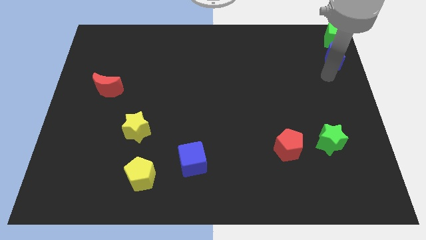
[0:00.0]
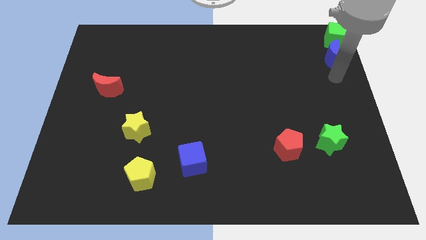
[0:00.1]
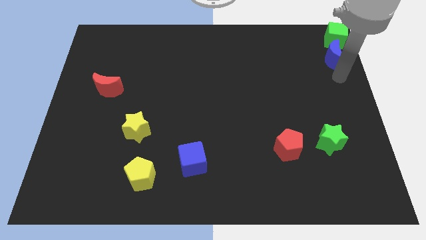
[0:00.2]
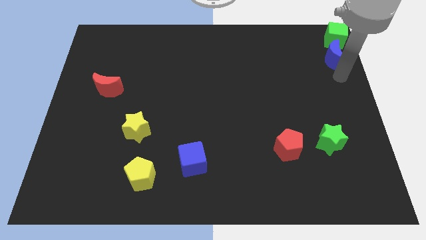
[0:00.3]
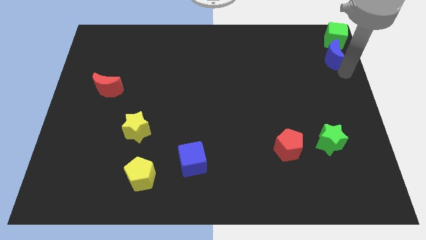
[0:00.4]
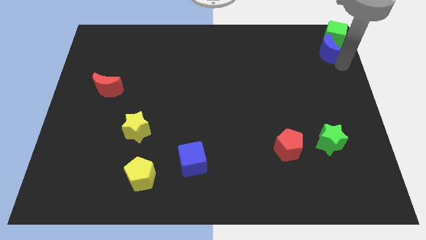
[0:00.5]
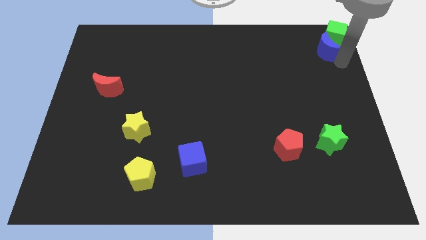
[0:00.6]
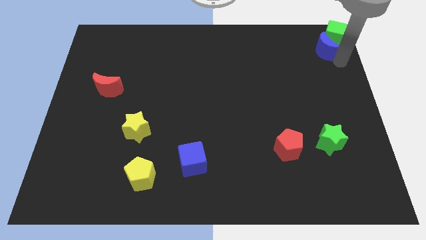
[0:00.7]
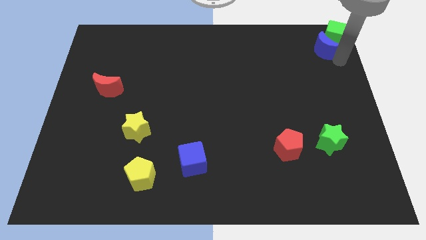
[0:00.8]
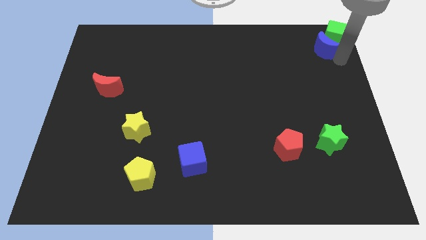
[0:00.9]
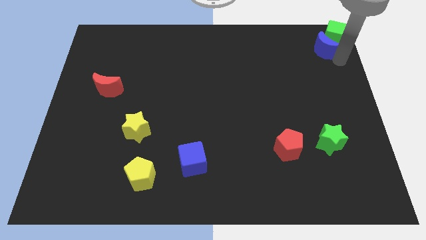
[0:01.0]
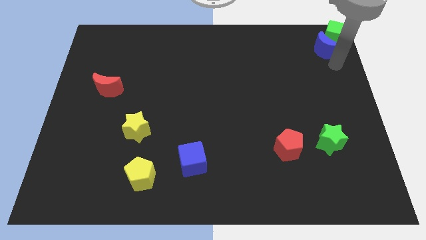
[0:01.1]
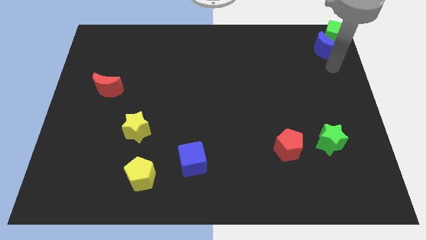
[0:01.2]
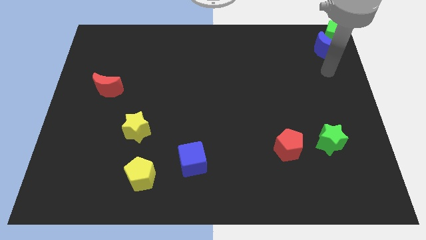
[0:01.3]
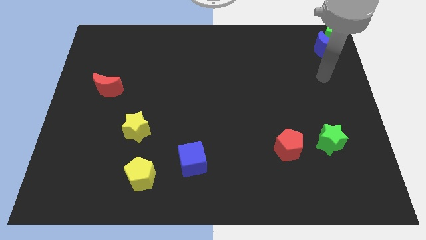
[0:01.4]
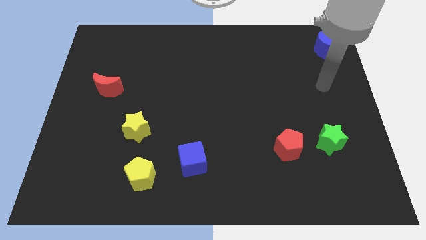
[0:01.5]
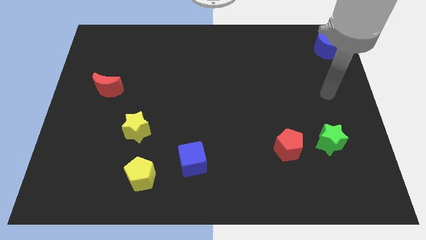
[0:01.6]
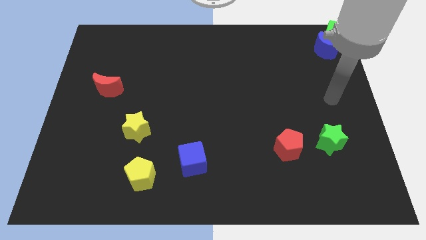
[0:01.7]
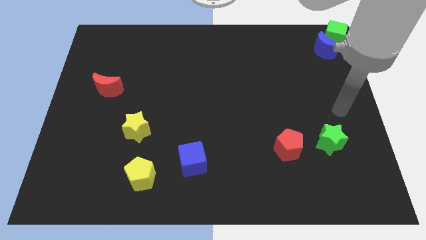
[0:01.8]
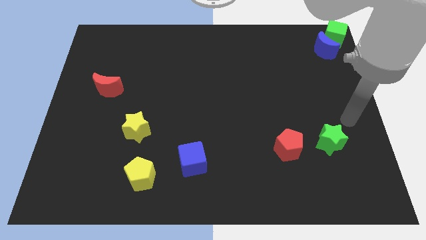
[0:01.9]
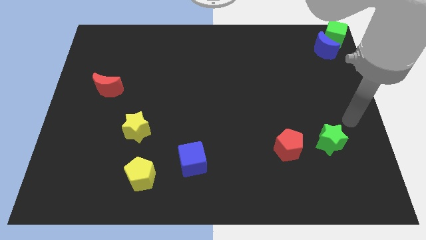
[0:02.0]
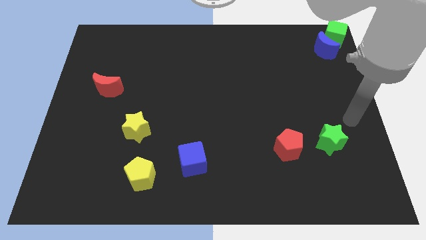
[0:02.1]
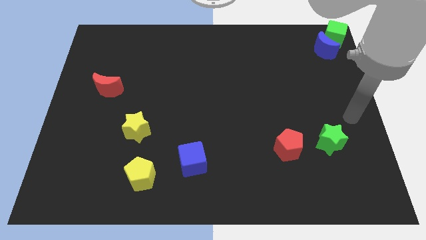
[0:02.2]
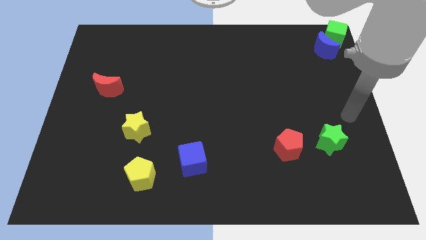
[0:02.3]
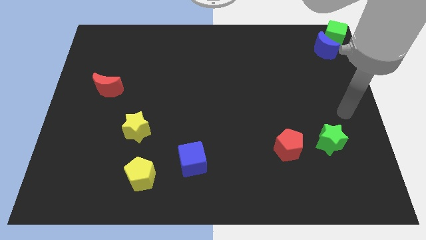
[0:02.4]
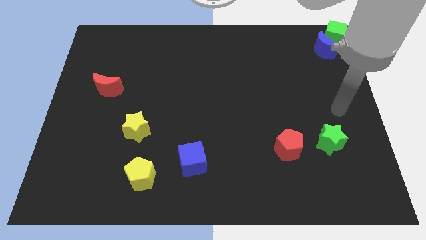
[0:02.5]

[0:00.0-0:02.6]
put the blue crescent into the green cube at the top right

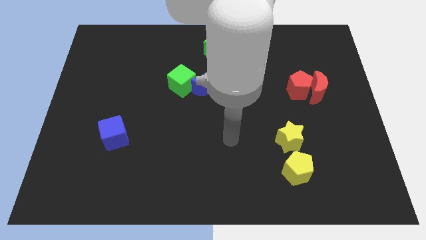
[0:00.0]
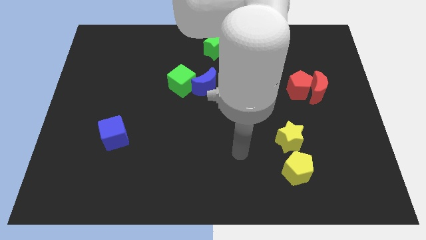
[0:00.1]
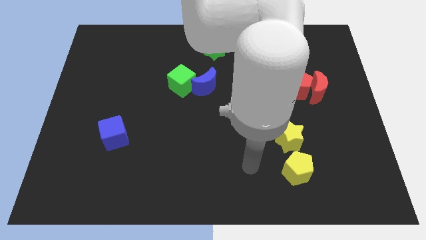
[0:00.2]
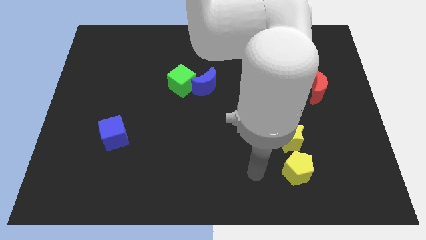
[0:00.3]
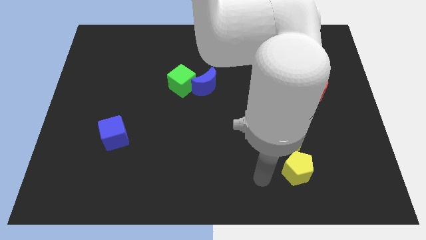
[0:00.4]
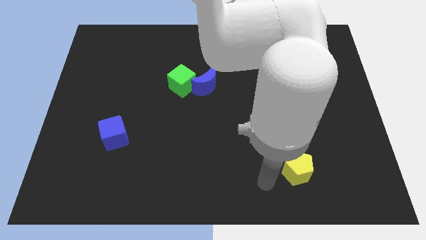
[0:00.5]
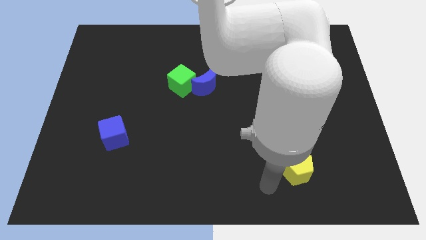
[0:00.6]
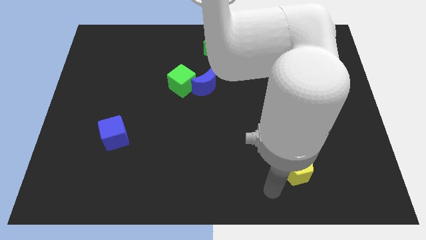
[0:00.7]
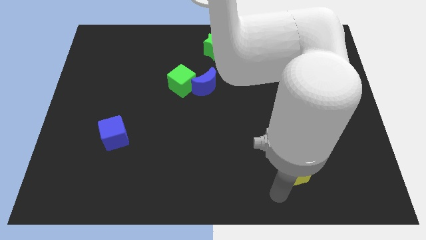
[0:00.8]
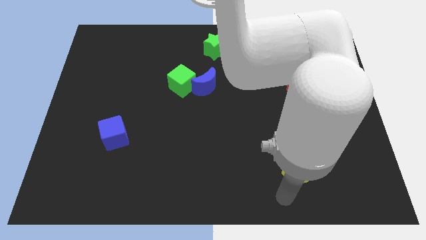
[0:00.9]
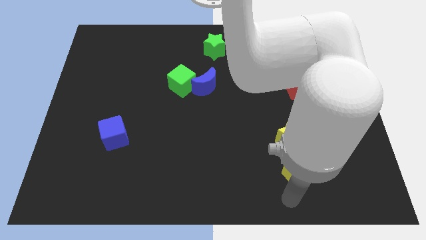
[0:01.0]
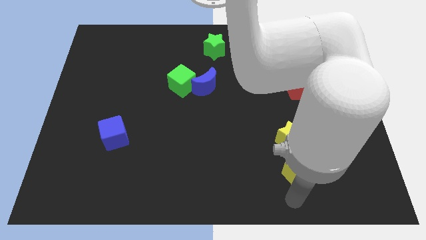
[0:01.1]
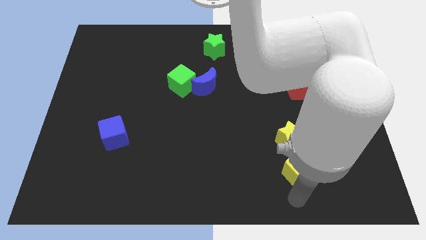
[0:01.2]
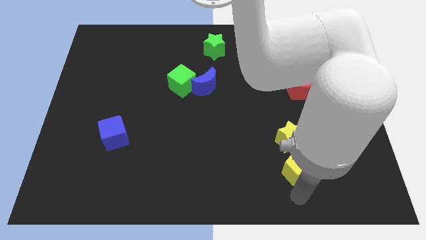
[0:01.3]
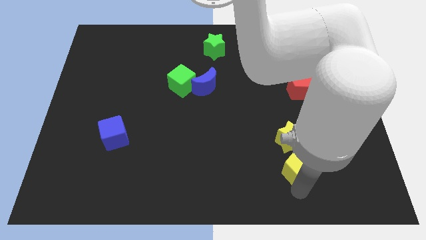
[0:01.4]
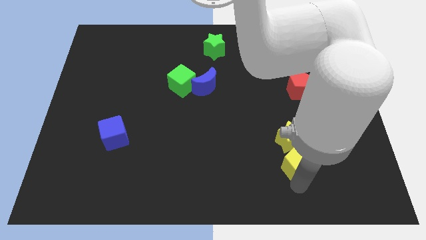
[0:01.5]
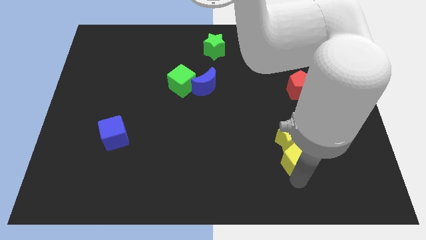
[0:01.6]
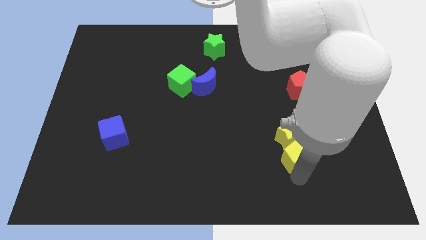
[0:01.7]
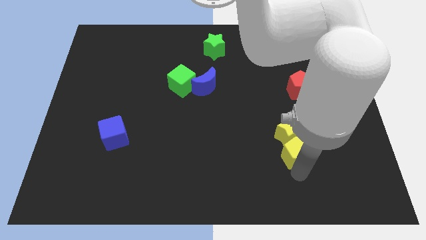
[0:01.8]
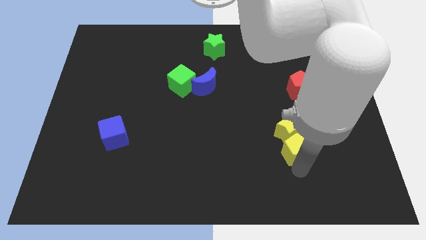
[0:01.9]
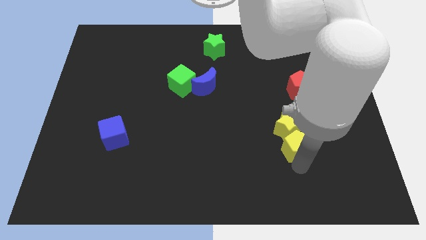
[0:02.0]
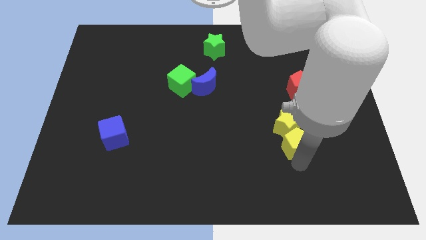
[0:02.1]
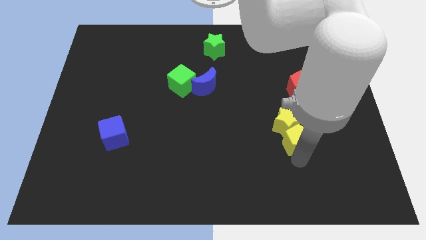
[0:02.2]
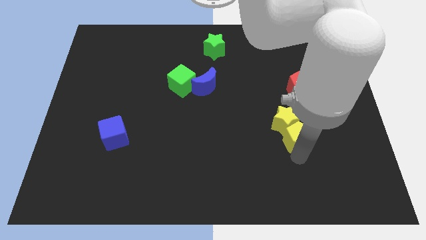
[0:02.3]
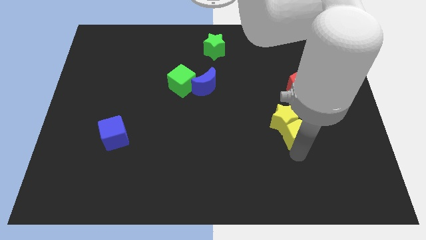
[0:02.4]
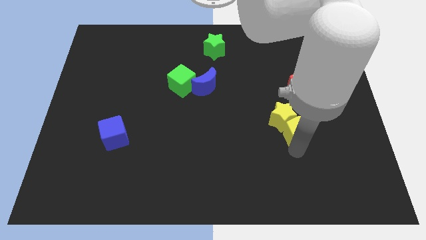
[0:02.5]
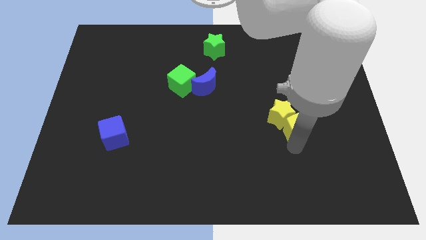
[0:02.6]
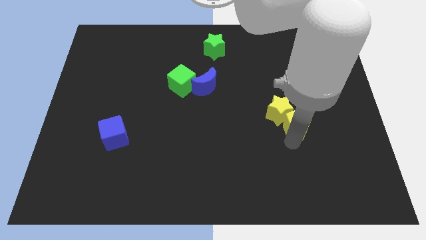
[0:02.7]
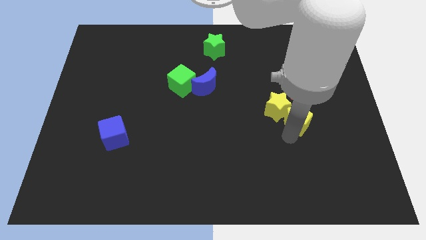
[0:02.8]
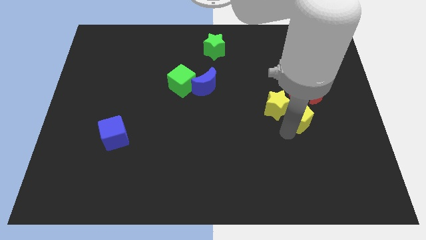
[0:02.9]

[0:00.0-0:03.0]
drag the yellow pentagon into the yellow star towards red pentagon

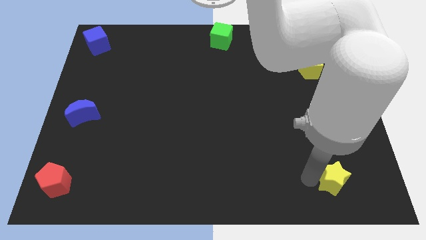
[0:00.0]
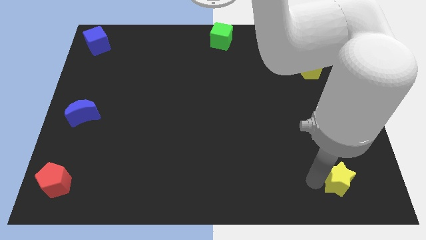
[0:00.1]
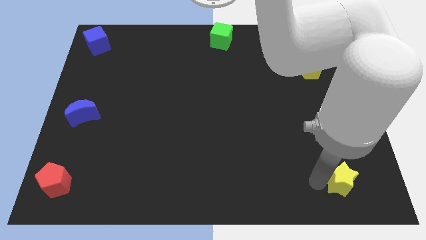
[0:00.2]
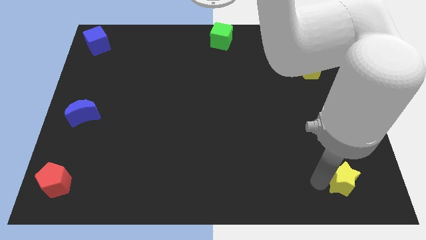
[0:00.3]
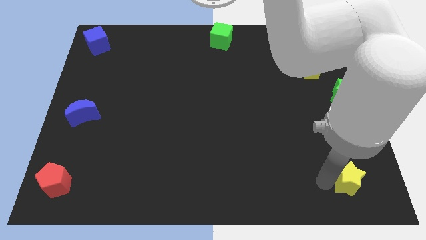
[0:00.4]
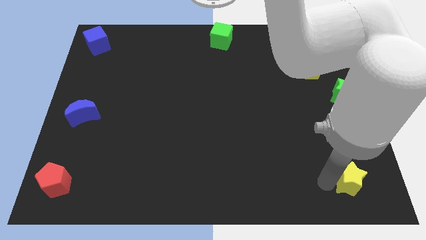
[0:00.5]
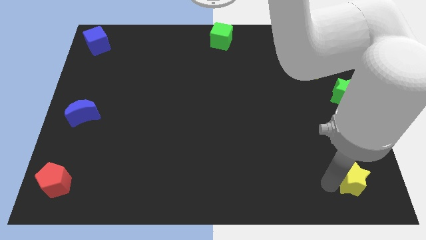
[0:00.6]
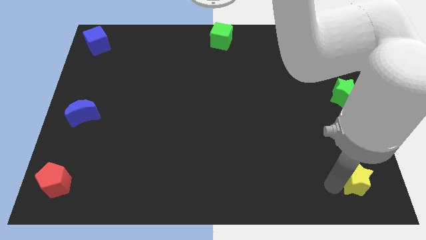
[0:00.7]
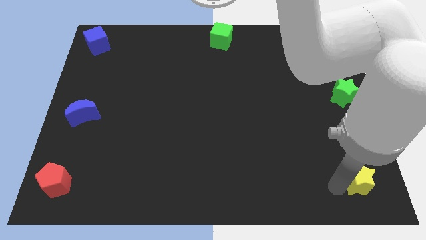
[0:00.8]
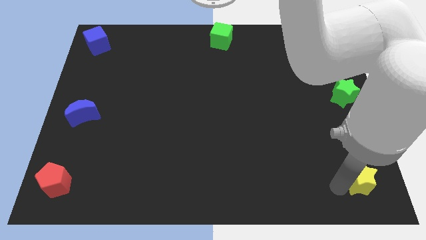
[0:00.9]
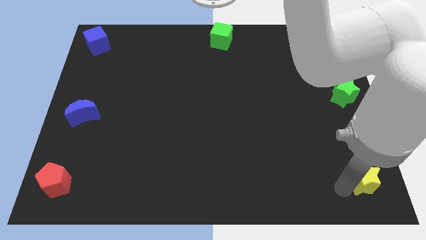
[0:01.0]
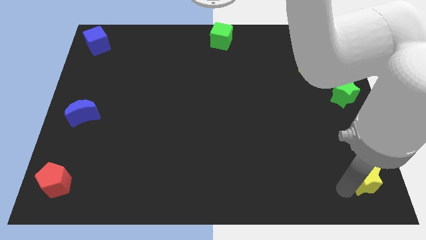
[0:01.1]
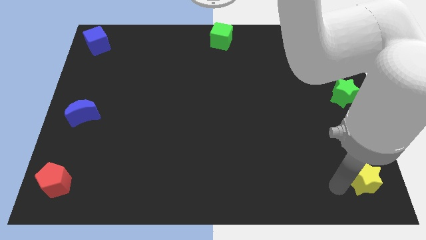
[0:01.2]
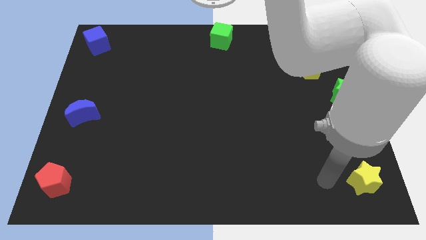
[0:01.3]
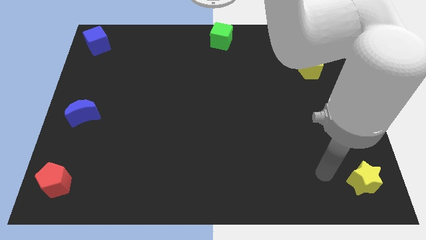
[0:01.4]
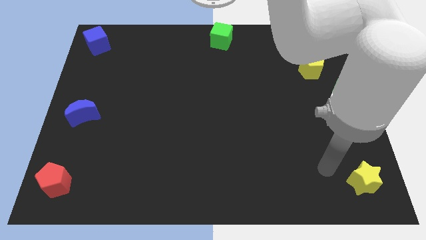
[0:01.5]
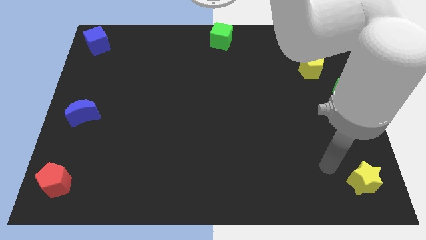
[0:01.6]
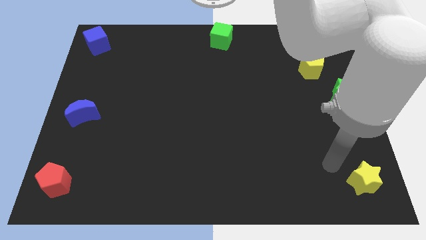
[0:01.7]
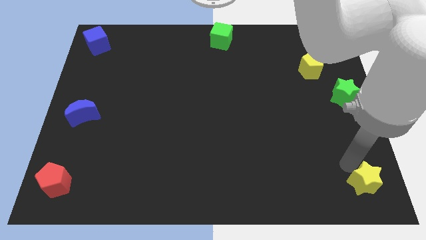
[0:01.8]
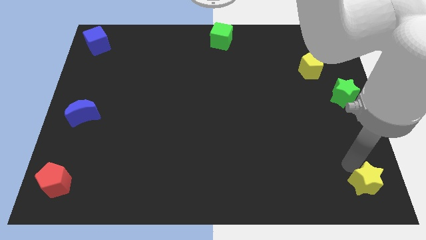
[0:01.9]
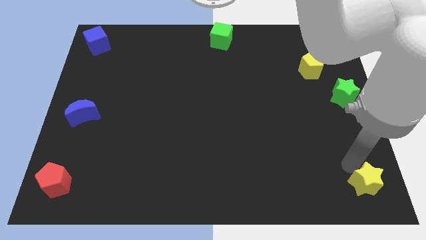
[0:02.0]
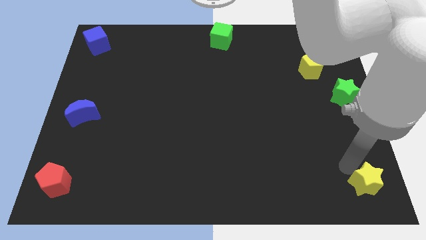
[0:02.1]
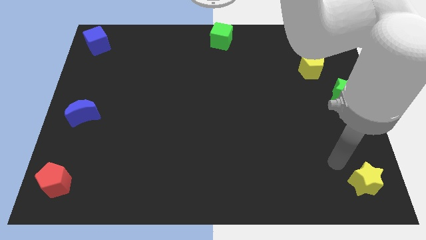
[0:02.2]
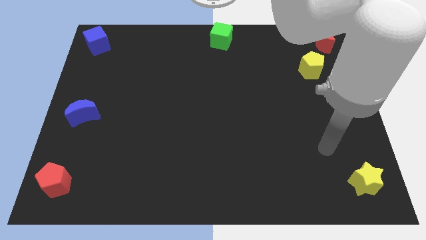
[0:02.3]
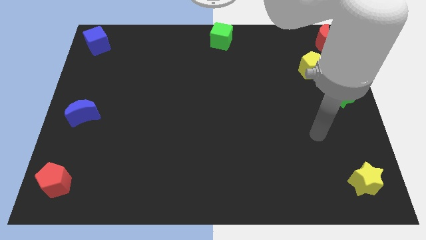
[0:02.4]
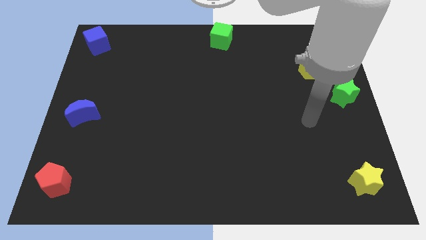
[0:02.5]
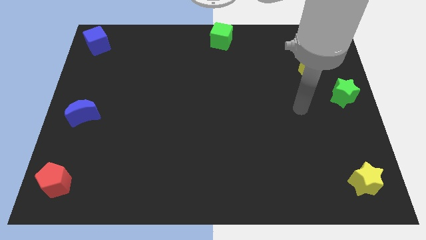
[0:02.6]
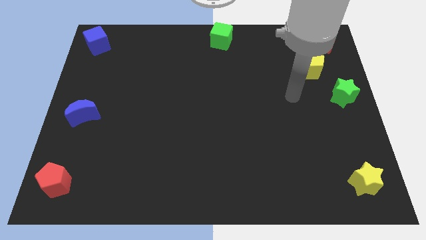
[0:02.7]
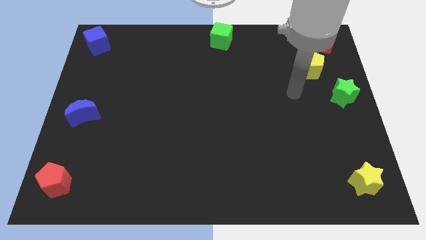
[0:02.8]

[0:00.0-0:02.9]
put the yellow star underneath the green star

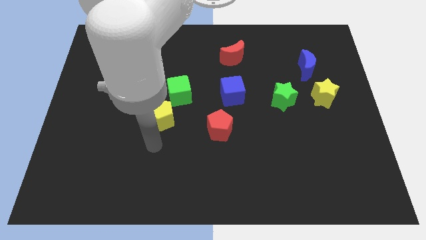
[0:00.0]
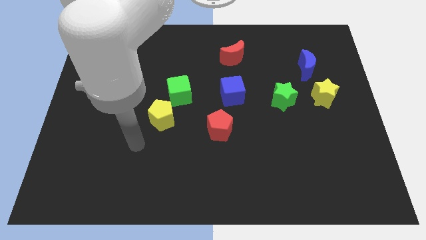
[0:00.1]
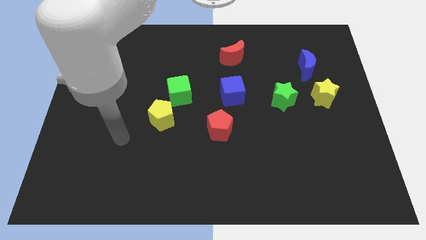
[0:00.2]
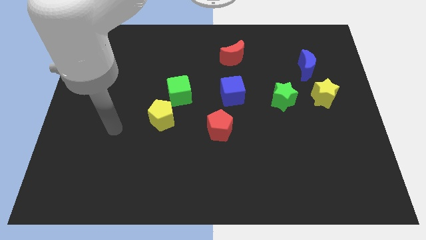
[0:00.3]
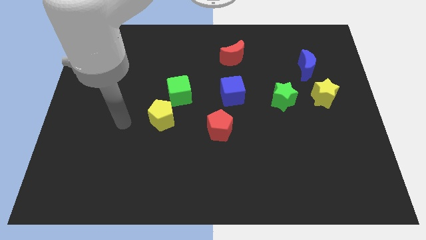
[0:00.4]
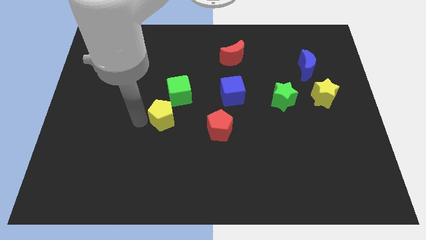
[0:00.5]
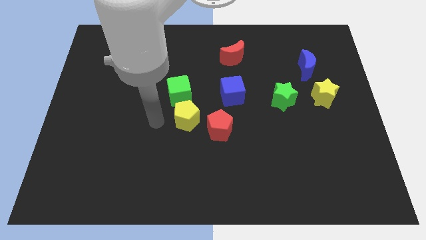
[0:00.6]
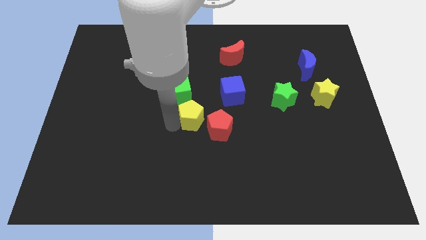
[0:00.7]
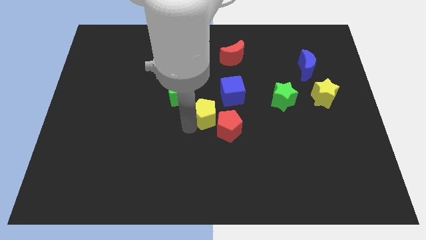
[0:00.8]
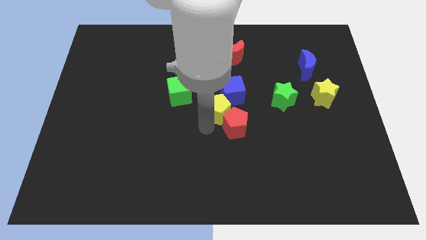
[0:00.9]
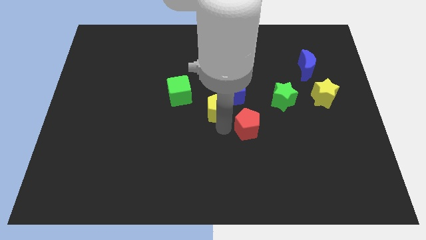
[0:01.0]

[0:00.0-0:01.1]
move the yellow pentagon left below the blue cube
